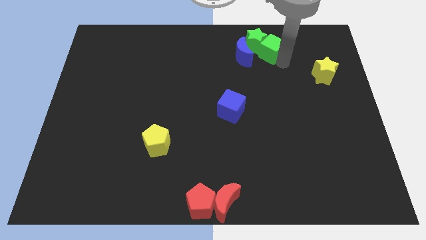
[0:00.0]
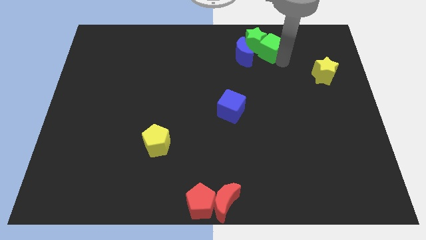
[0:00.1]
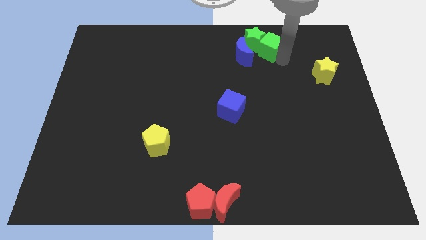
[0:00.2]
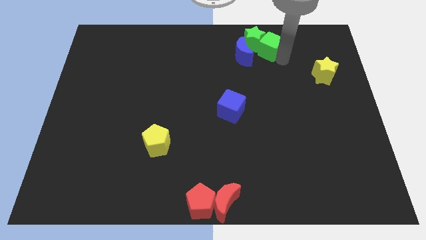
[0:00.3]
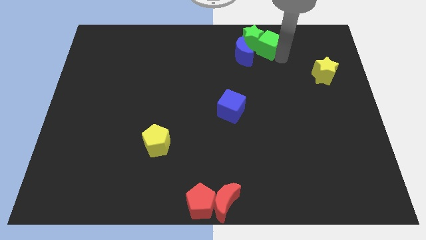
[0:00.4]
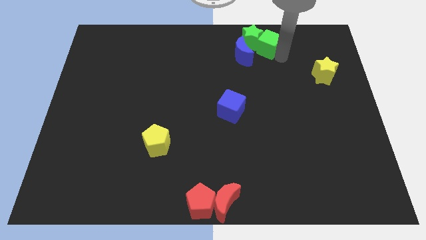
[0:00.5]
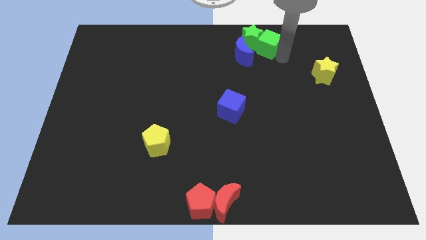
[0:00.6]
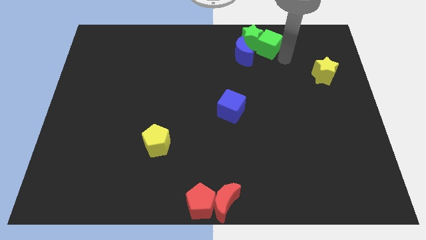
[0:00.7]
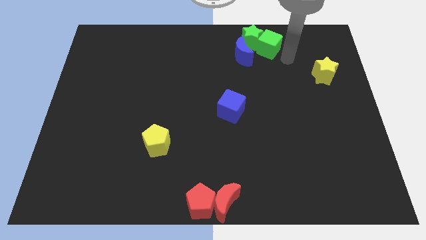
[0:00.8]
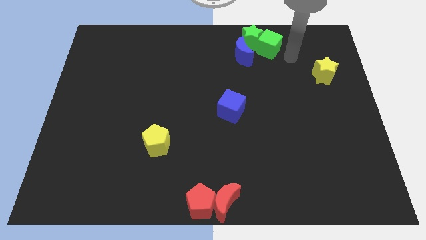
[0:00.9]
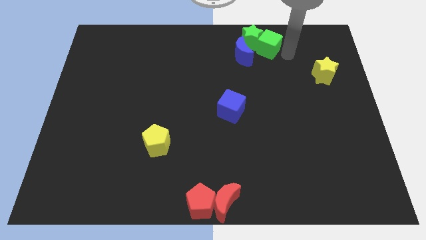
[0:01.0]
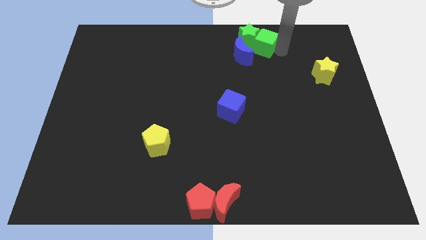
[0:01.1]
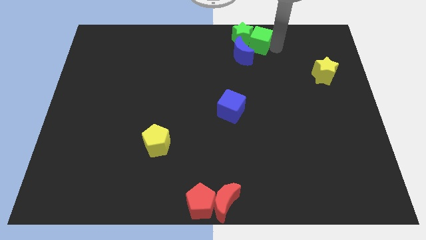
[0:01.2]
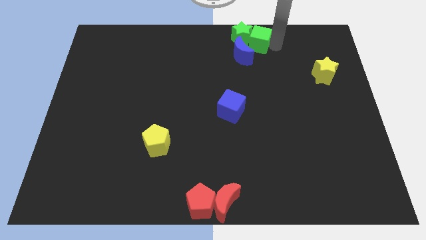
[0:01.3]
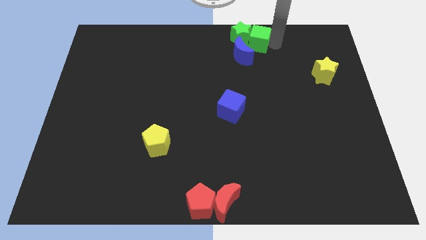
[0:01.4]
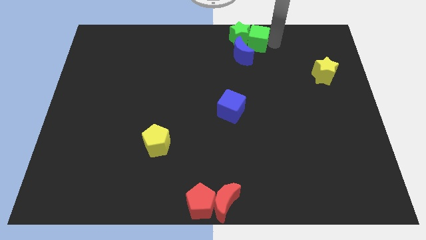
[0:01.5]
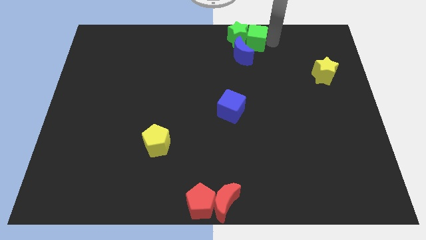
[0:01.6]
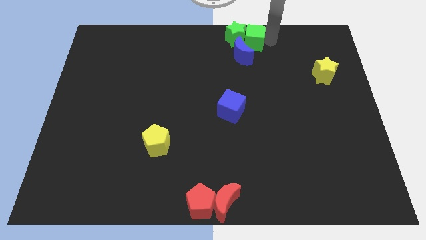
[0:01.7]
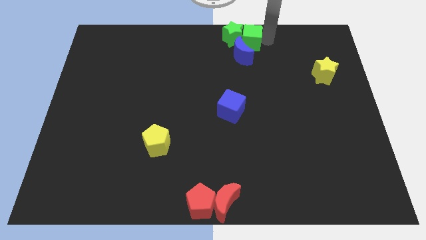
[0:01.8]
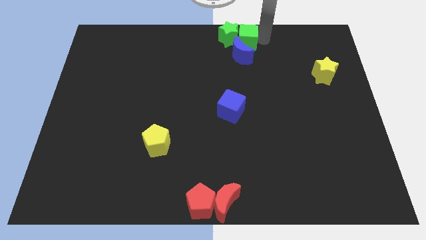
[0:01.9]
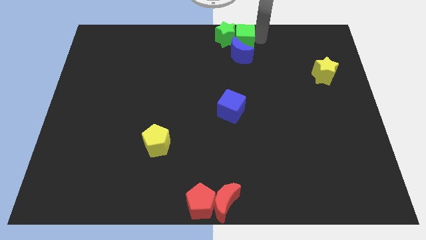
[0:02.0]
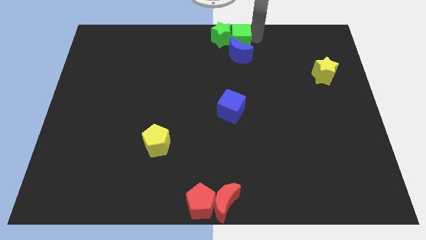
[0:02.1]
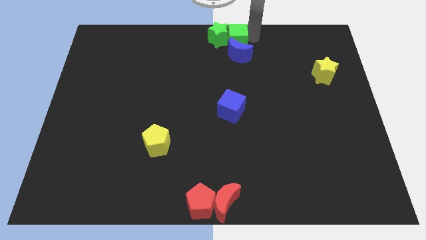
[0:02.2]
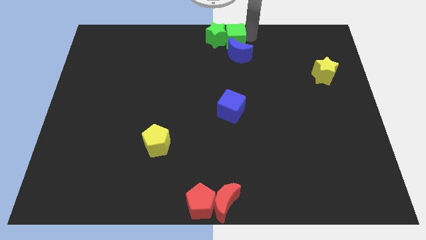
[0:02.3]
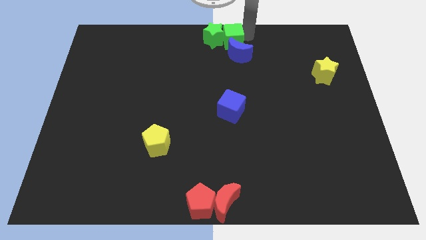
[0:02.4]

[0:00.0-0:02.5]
place the green blocks at the top center of the board

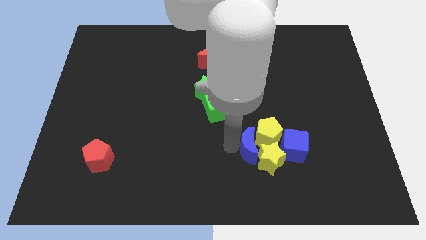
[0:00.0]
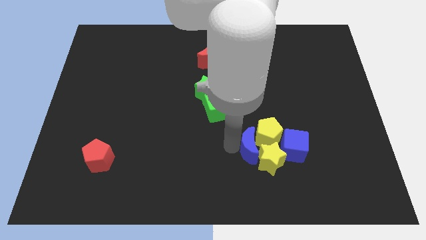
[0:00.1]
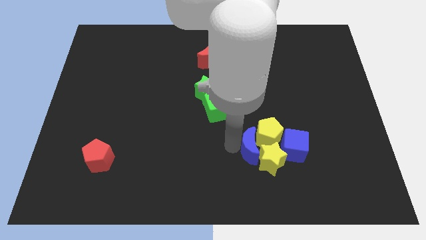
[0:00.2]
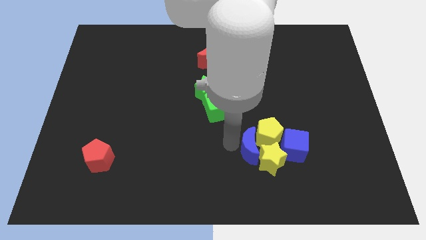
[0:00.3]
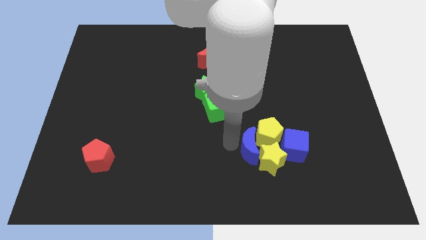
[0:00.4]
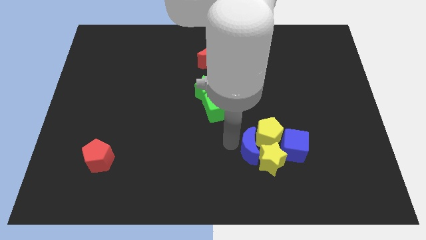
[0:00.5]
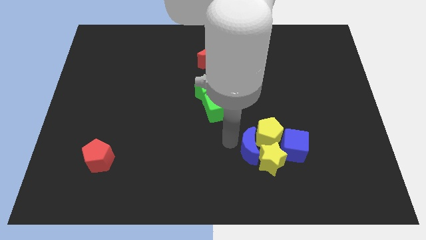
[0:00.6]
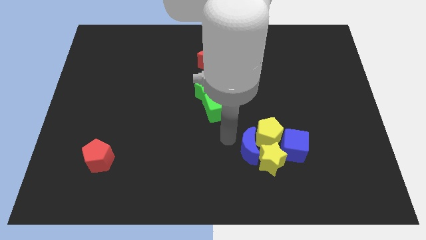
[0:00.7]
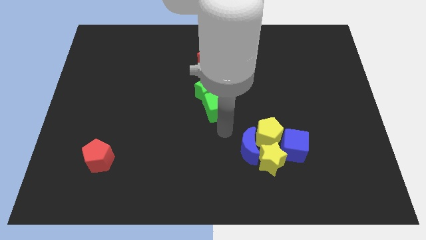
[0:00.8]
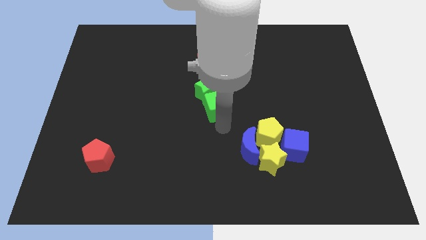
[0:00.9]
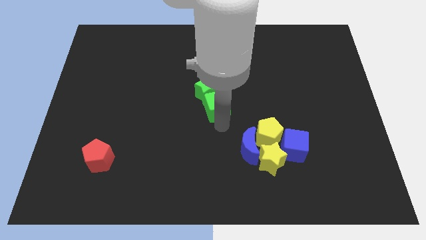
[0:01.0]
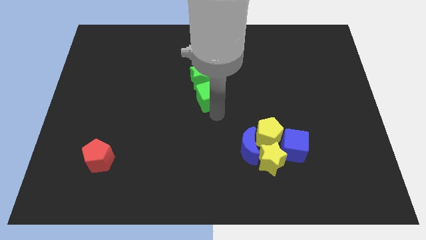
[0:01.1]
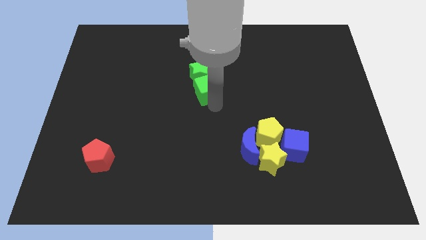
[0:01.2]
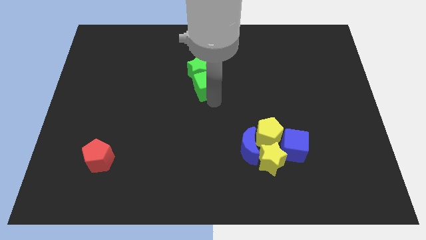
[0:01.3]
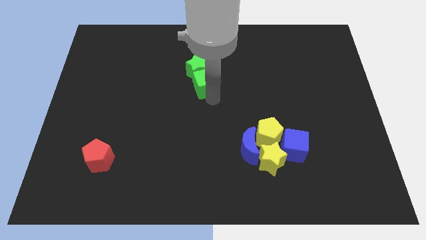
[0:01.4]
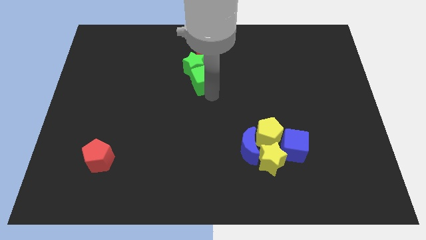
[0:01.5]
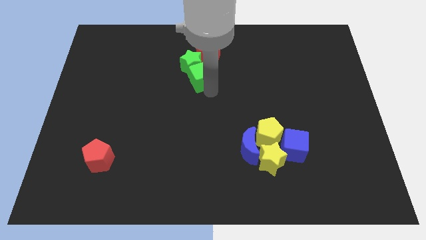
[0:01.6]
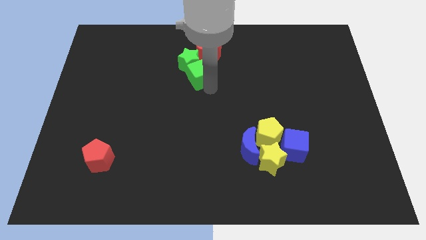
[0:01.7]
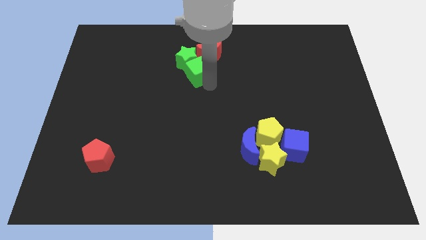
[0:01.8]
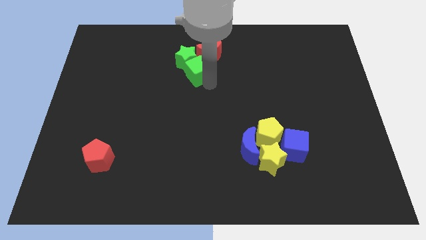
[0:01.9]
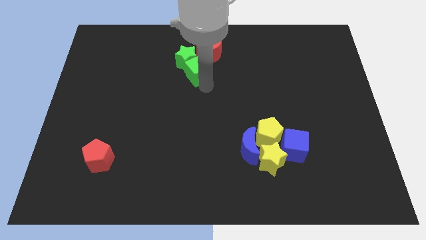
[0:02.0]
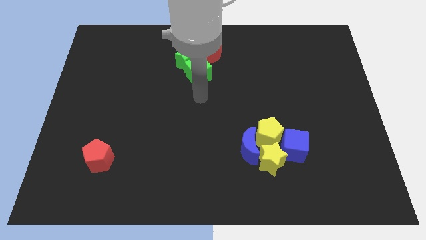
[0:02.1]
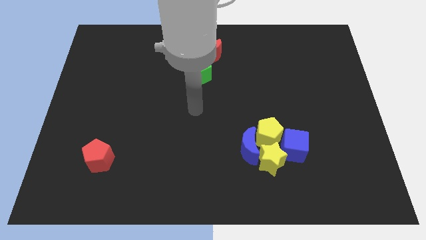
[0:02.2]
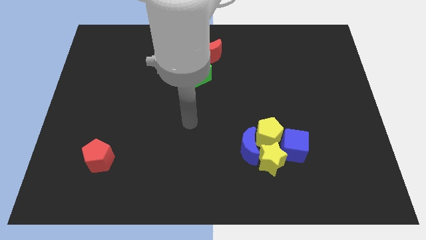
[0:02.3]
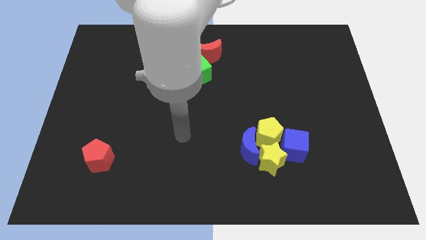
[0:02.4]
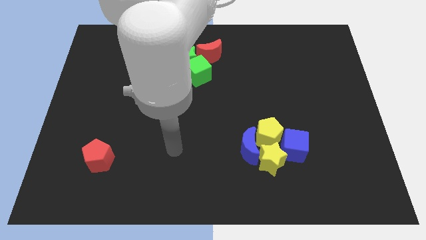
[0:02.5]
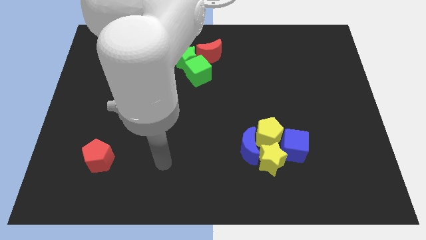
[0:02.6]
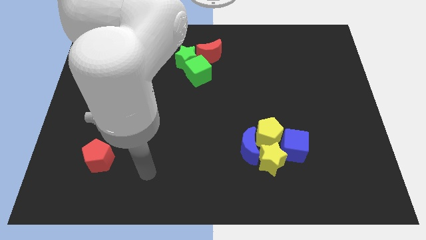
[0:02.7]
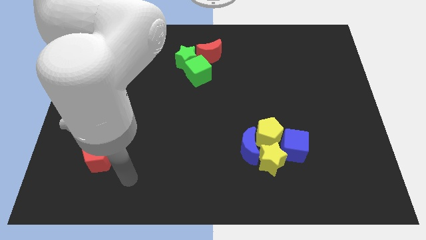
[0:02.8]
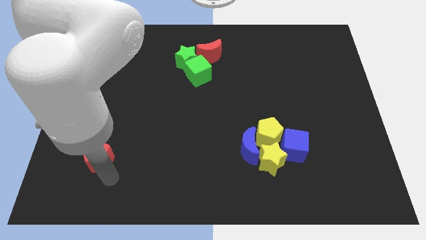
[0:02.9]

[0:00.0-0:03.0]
slide the green blocks close to the left side of the red moon

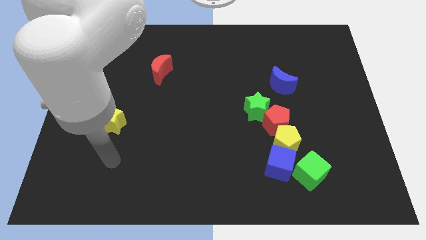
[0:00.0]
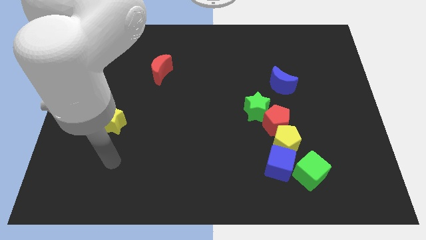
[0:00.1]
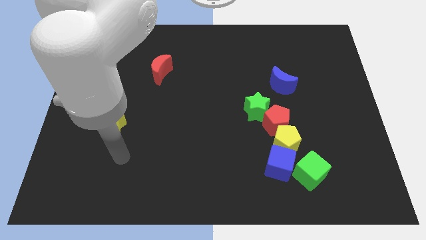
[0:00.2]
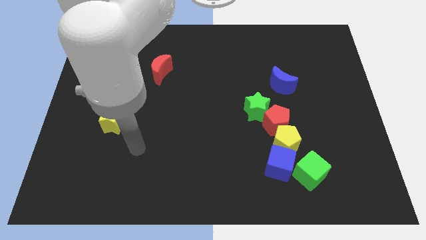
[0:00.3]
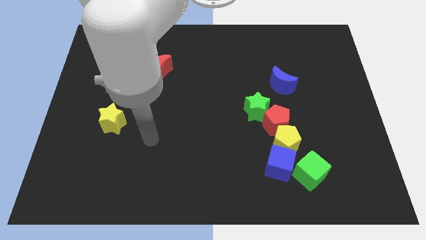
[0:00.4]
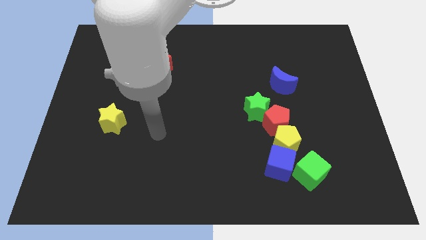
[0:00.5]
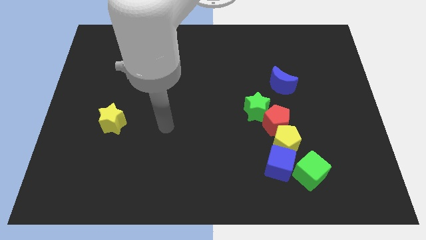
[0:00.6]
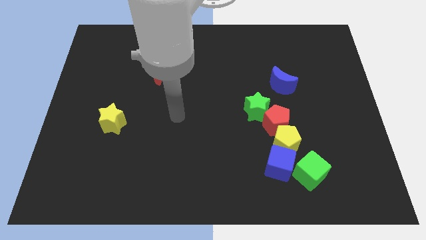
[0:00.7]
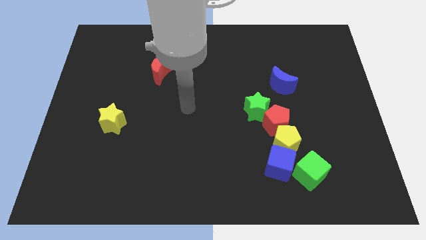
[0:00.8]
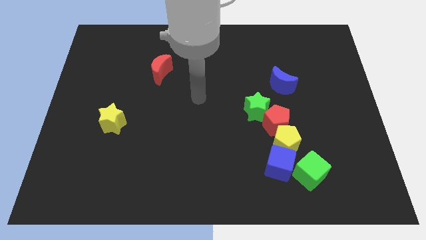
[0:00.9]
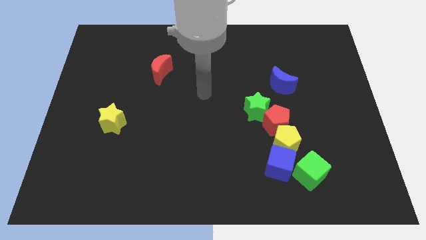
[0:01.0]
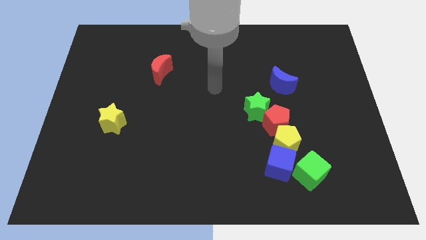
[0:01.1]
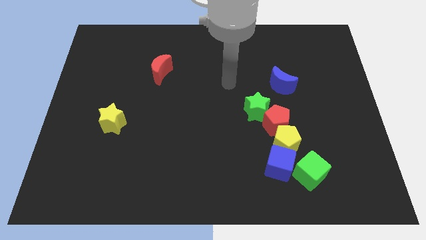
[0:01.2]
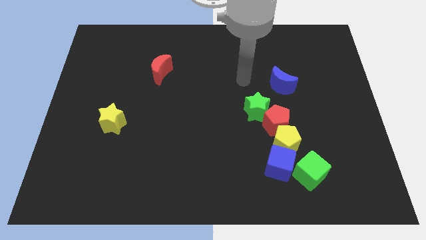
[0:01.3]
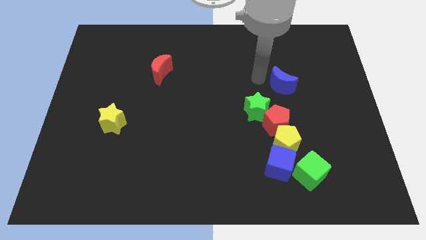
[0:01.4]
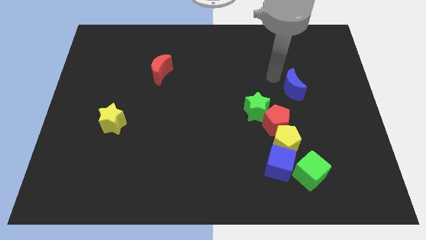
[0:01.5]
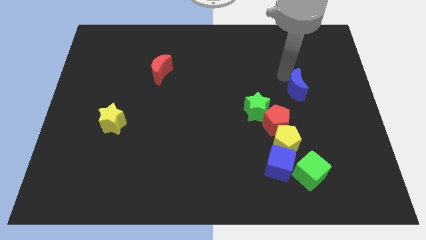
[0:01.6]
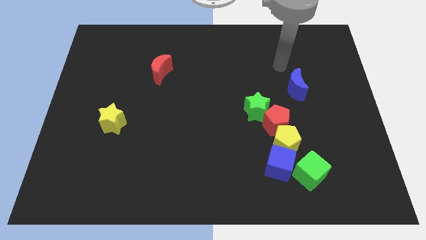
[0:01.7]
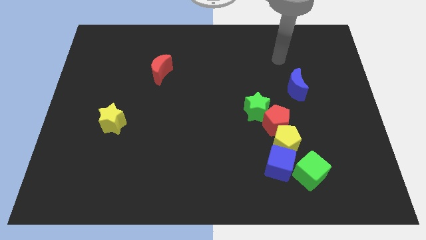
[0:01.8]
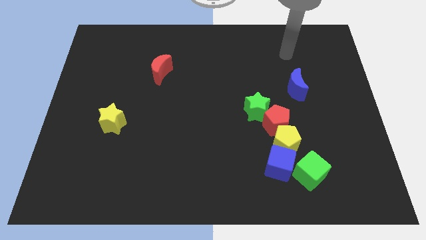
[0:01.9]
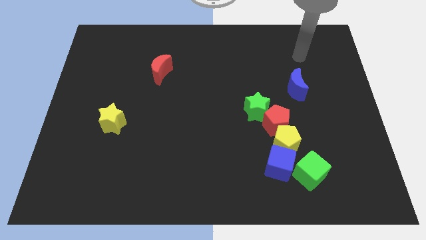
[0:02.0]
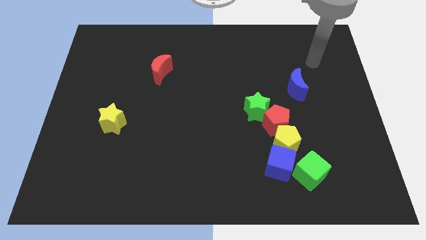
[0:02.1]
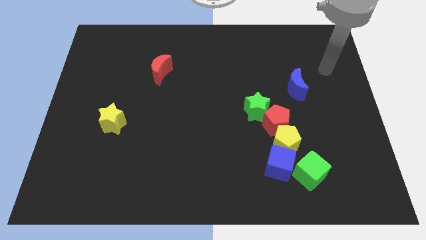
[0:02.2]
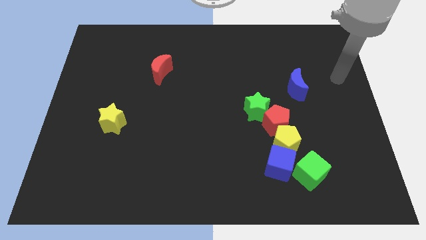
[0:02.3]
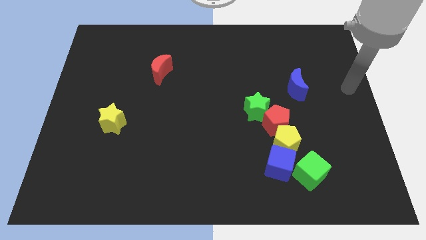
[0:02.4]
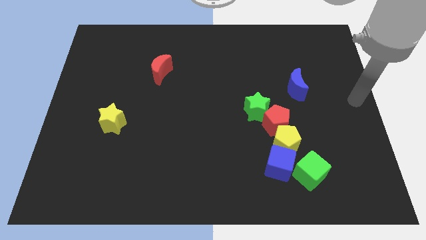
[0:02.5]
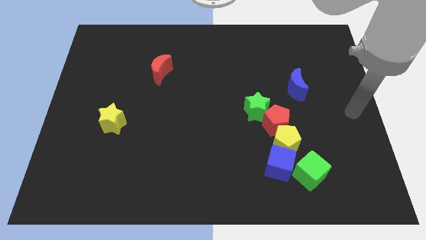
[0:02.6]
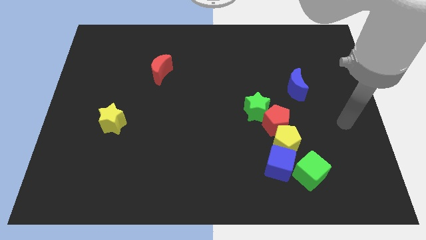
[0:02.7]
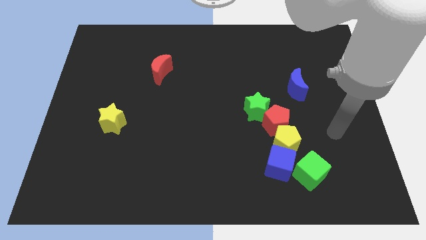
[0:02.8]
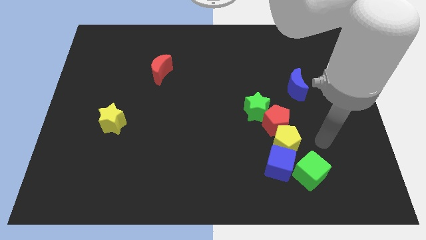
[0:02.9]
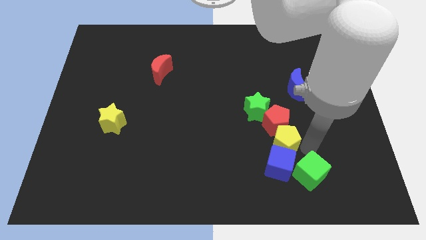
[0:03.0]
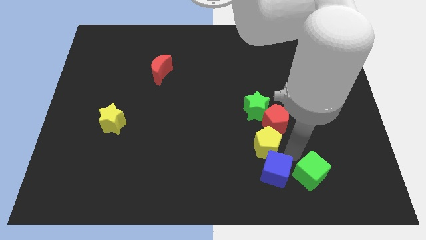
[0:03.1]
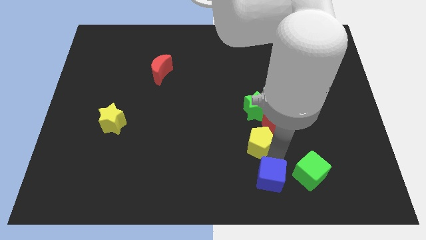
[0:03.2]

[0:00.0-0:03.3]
separate the yellow pentagon from the blue cube

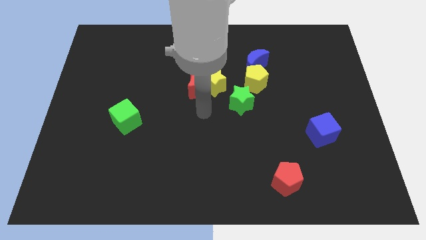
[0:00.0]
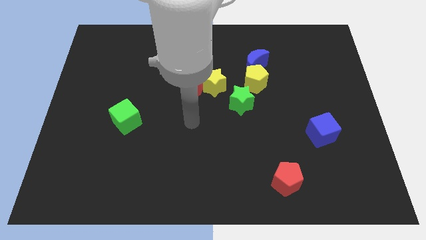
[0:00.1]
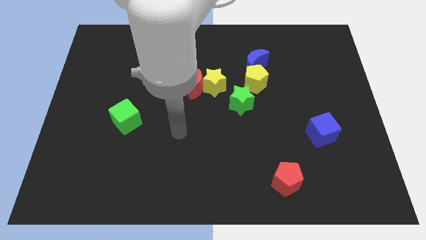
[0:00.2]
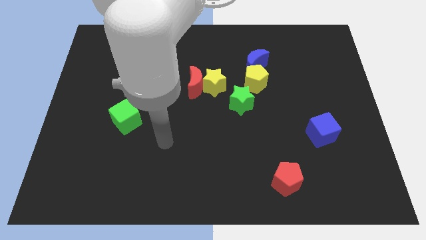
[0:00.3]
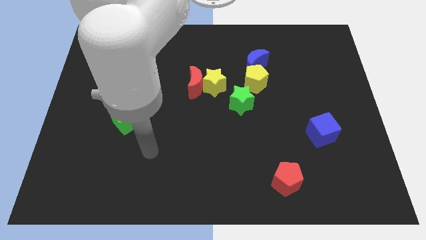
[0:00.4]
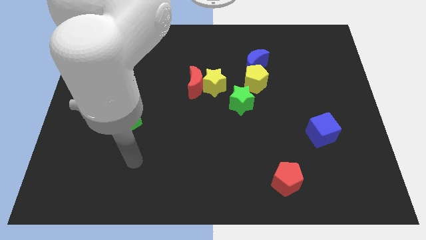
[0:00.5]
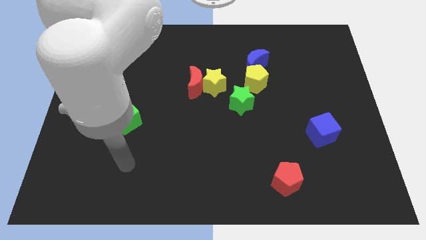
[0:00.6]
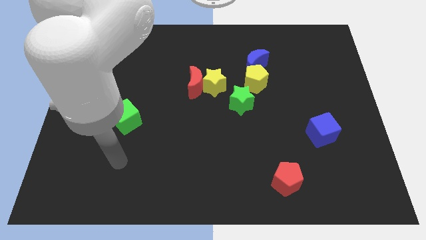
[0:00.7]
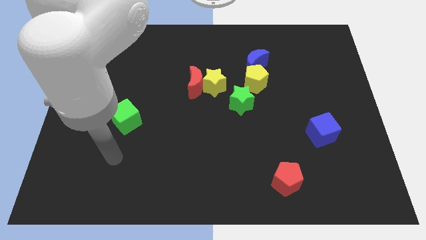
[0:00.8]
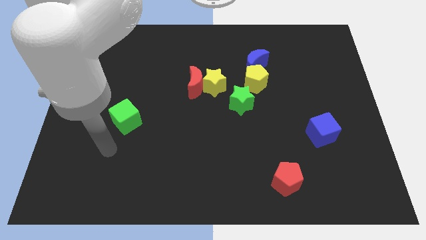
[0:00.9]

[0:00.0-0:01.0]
move your arm away from yellow star
